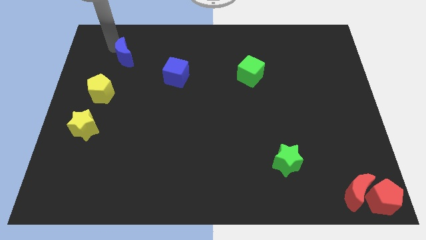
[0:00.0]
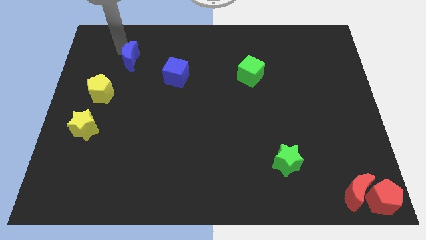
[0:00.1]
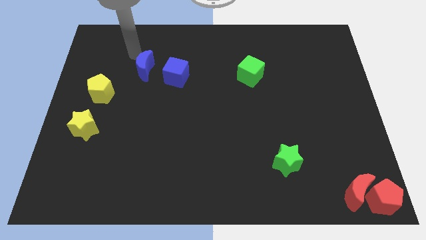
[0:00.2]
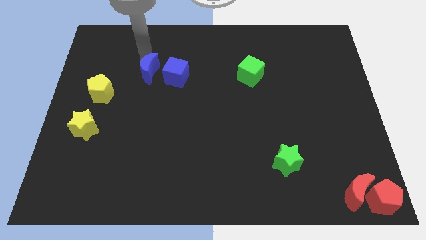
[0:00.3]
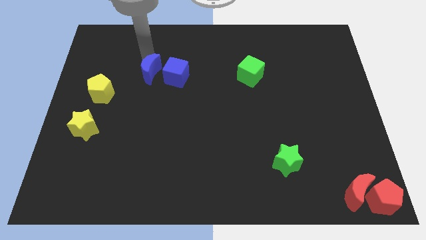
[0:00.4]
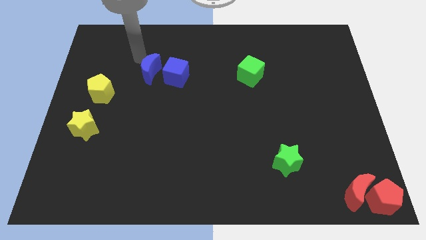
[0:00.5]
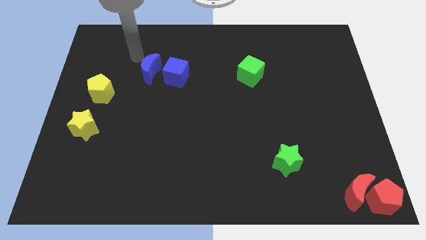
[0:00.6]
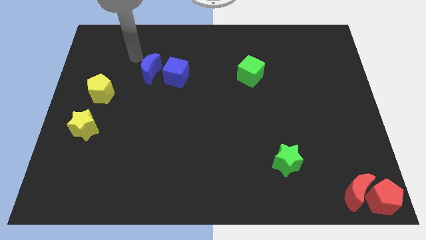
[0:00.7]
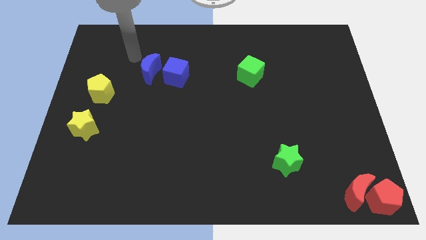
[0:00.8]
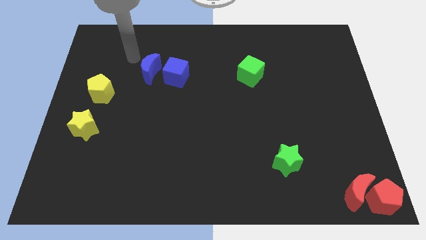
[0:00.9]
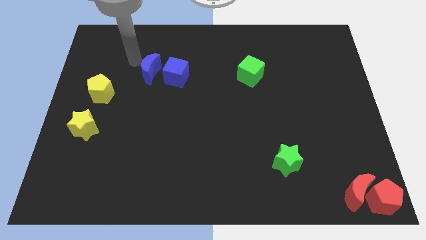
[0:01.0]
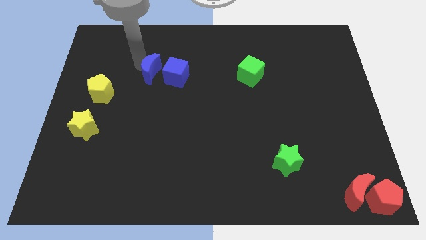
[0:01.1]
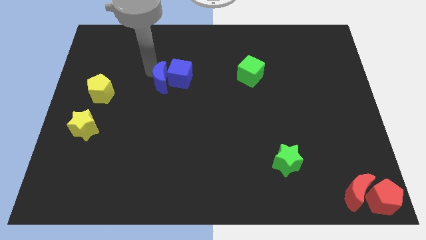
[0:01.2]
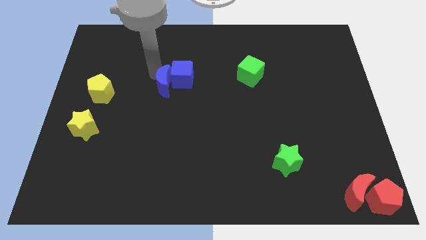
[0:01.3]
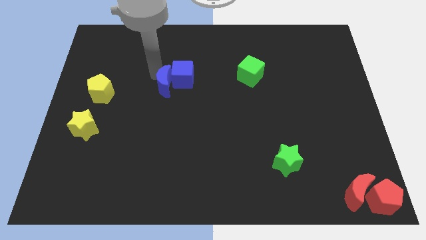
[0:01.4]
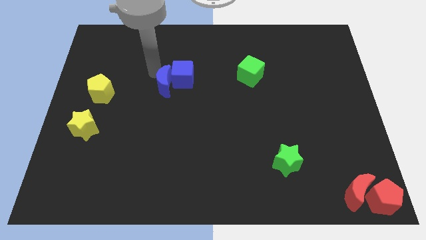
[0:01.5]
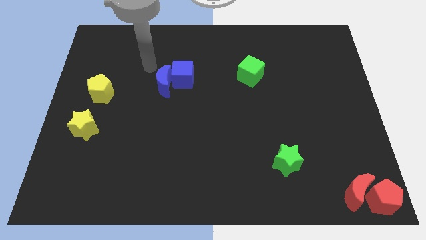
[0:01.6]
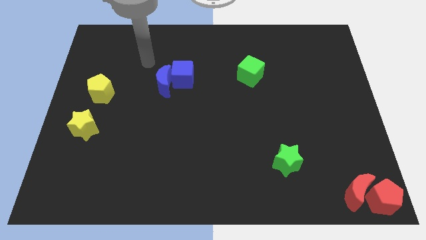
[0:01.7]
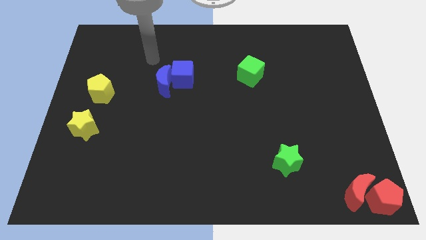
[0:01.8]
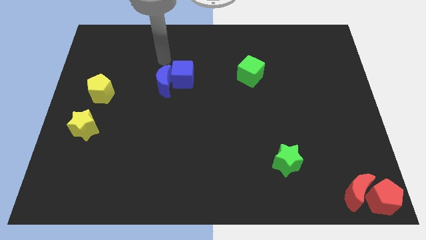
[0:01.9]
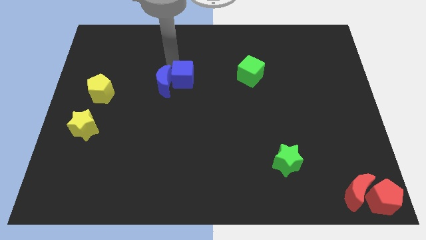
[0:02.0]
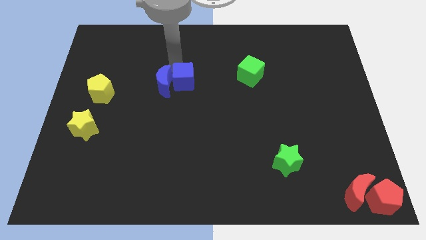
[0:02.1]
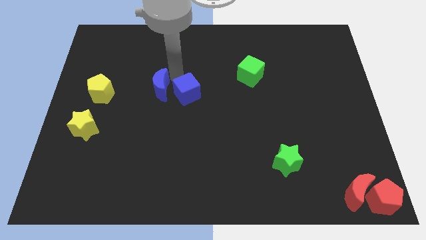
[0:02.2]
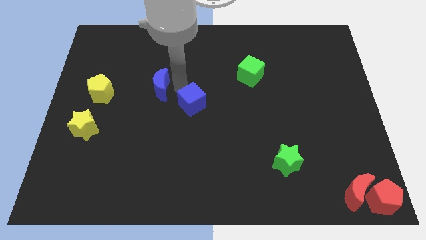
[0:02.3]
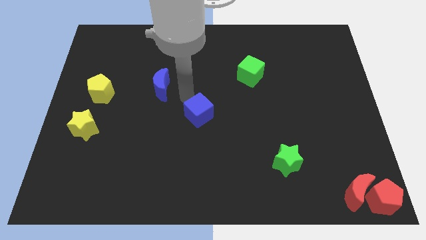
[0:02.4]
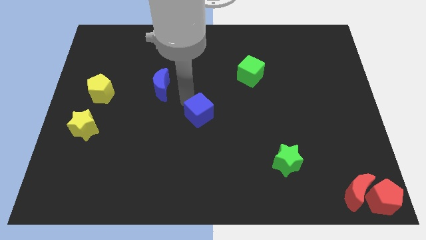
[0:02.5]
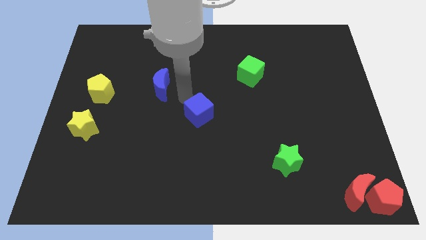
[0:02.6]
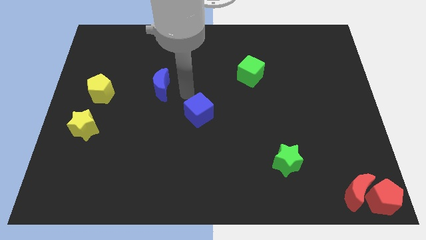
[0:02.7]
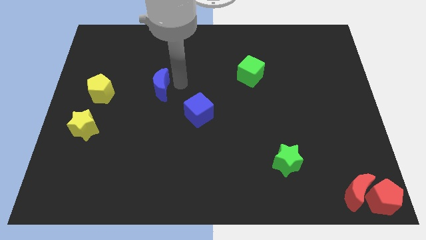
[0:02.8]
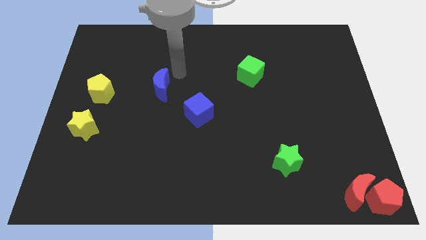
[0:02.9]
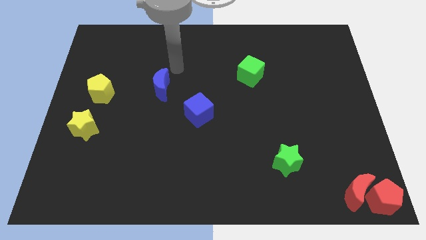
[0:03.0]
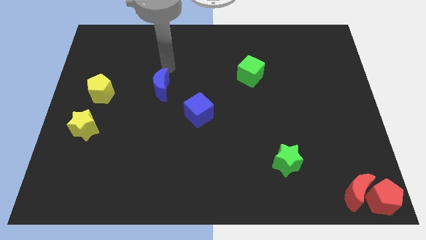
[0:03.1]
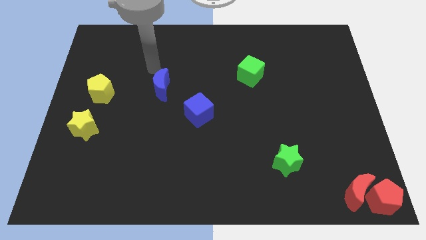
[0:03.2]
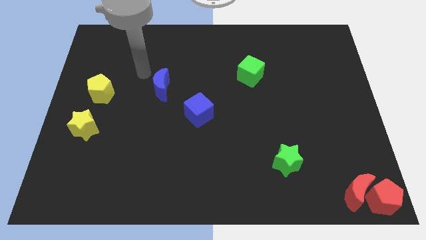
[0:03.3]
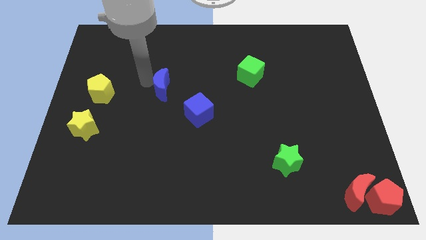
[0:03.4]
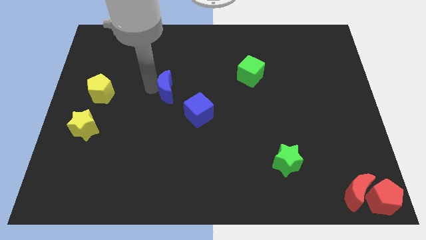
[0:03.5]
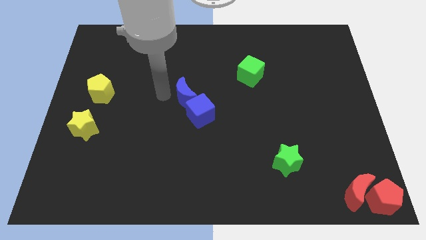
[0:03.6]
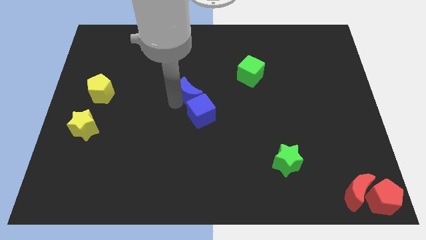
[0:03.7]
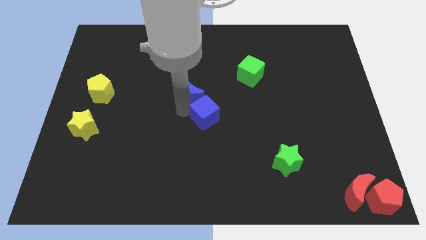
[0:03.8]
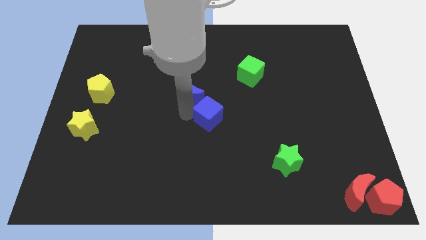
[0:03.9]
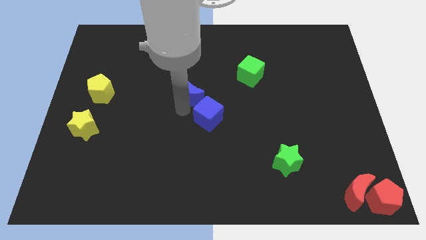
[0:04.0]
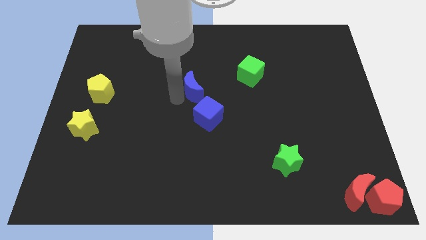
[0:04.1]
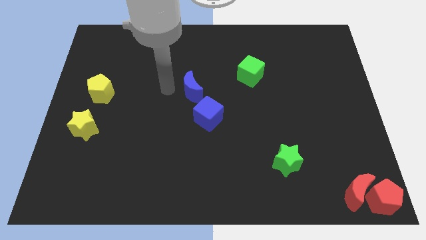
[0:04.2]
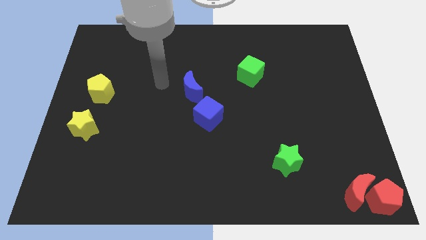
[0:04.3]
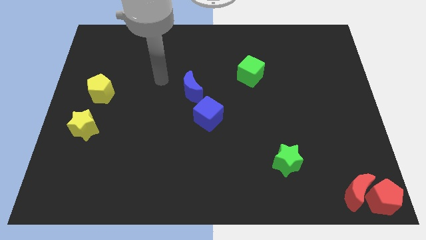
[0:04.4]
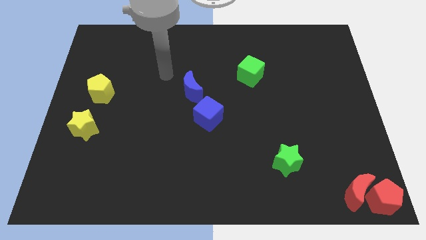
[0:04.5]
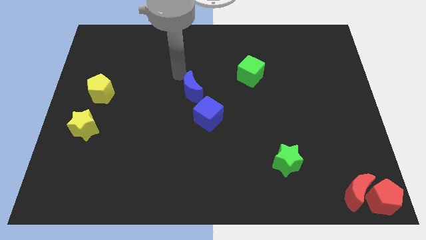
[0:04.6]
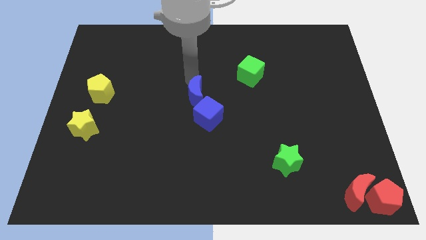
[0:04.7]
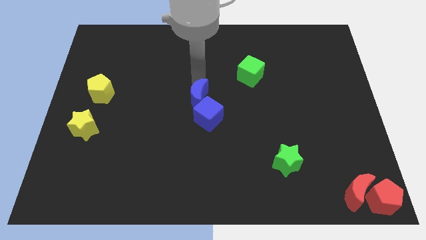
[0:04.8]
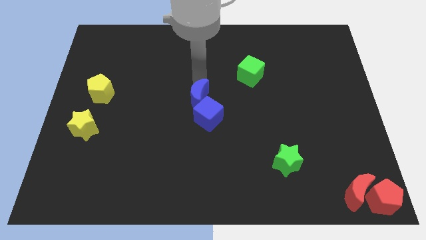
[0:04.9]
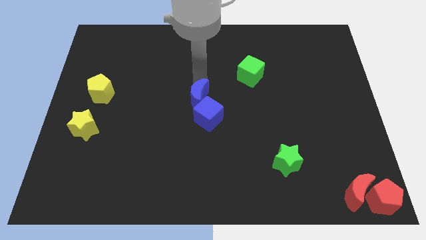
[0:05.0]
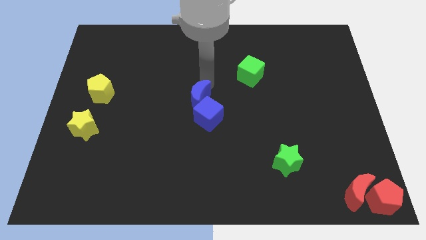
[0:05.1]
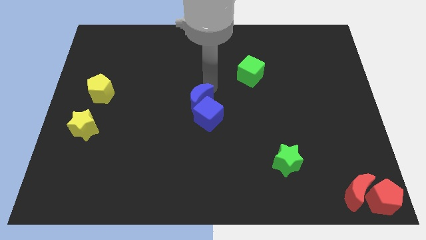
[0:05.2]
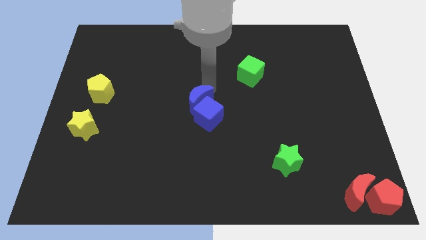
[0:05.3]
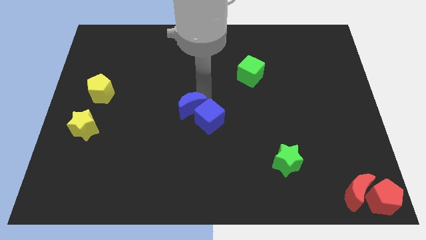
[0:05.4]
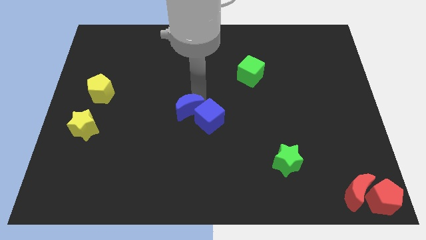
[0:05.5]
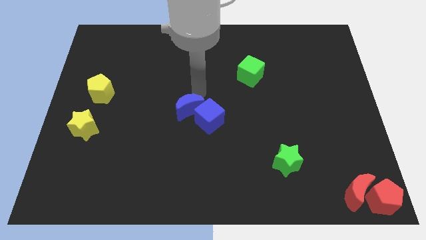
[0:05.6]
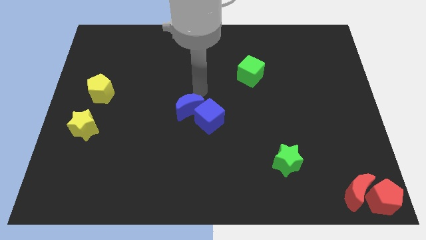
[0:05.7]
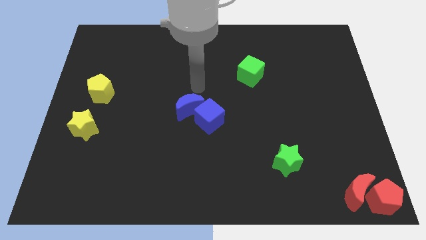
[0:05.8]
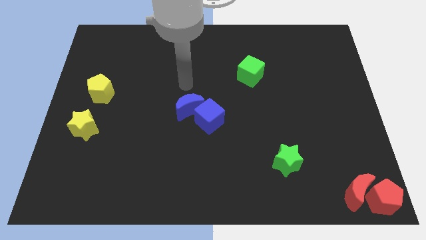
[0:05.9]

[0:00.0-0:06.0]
place the blue crescent and blue cube at the center of the board

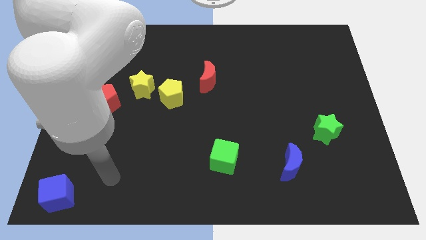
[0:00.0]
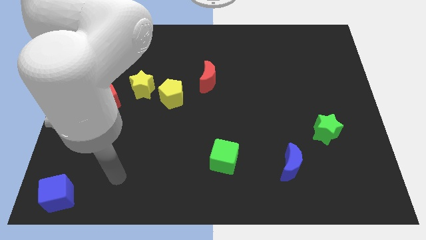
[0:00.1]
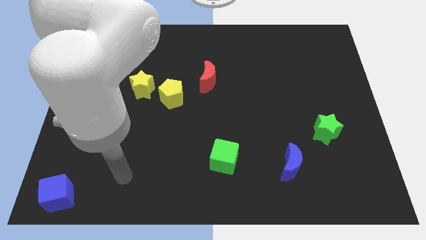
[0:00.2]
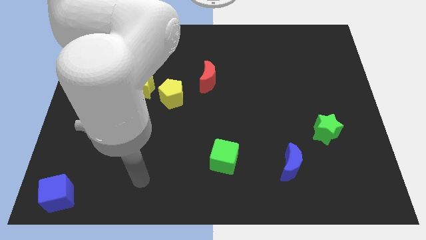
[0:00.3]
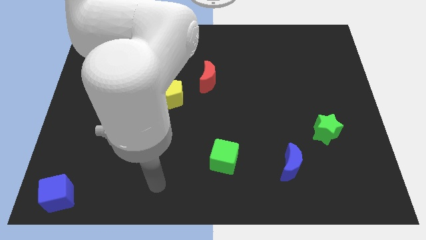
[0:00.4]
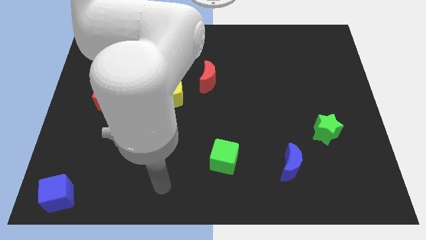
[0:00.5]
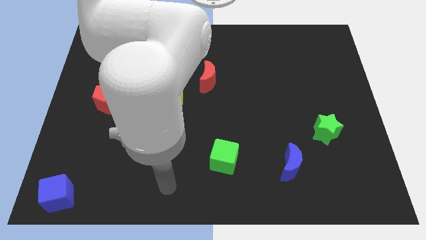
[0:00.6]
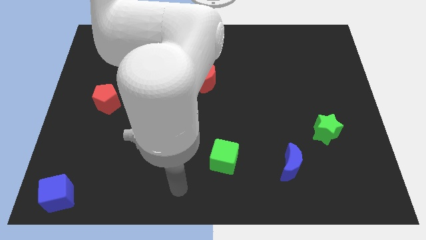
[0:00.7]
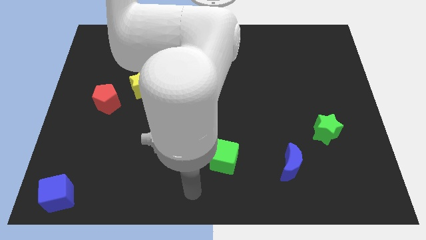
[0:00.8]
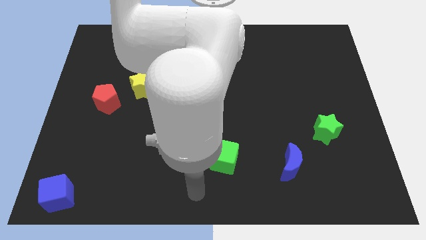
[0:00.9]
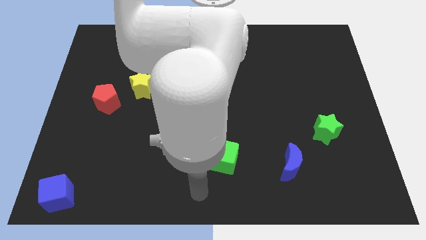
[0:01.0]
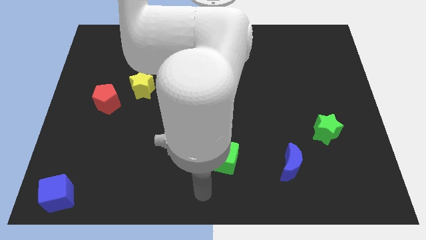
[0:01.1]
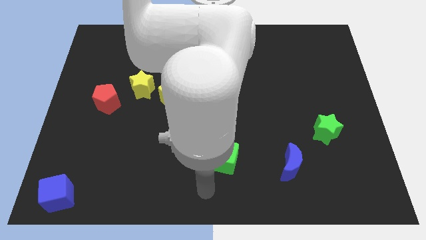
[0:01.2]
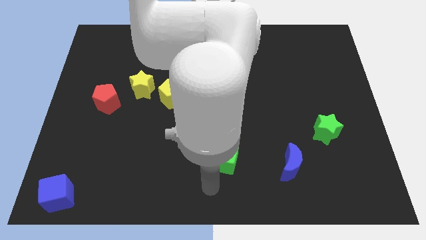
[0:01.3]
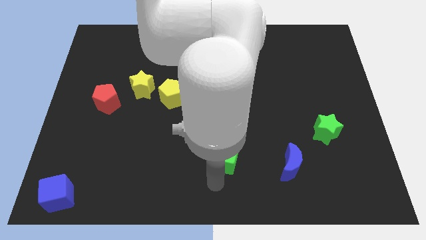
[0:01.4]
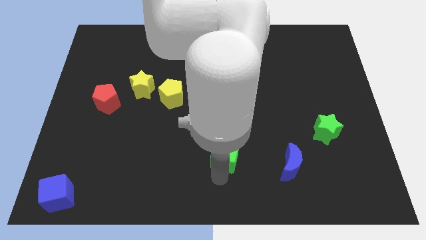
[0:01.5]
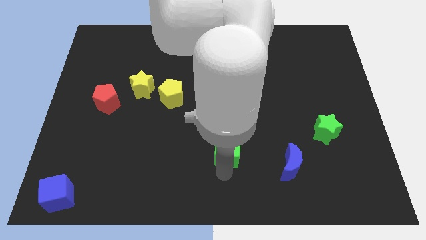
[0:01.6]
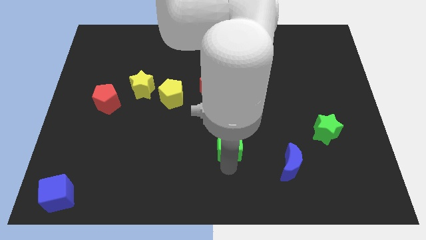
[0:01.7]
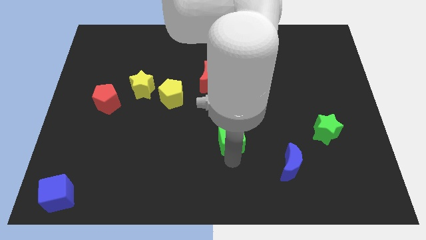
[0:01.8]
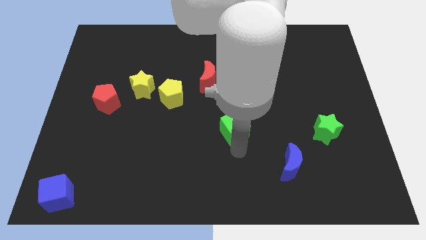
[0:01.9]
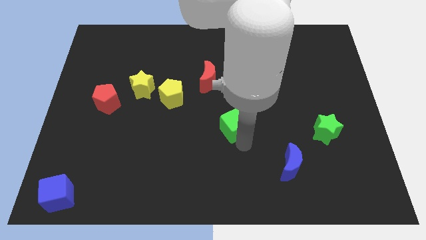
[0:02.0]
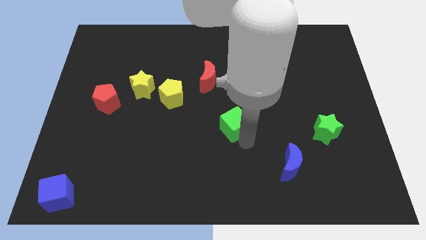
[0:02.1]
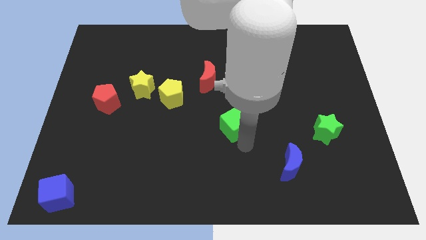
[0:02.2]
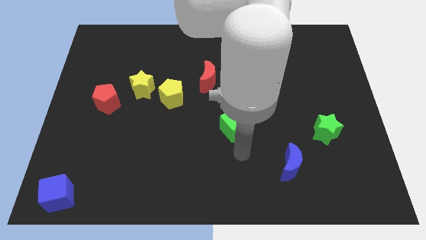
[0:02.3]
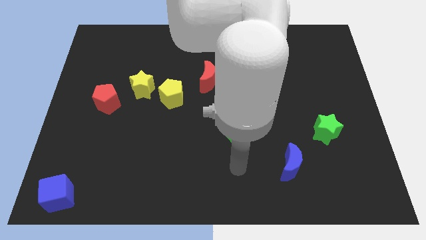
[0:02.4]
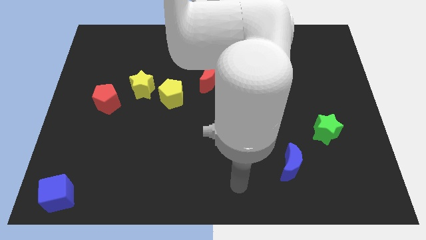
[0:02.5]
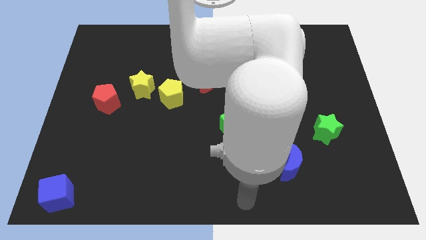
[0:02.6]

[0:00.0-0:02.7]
move the arm towards right side bottom of the board

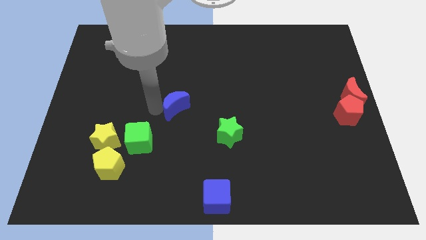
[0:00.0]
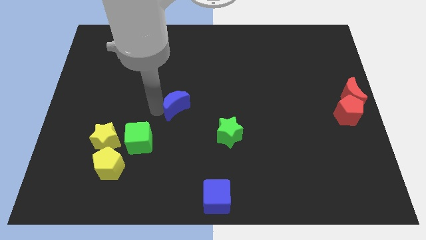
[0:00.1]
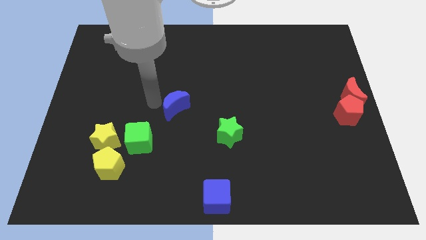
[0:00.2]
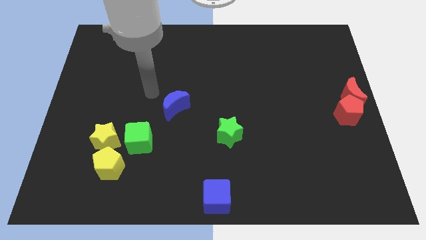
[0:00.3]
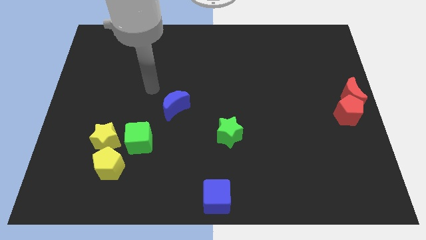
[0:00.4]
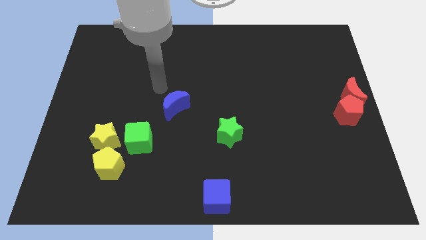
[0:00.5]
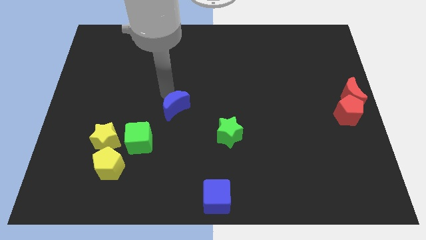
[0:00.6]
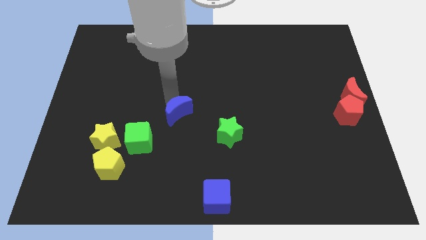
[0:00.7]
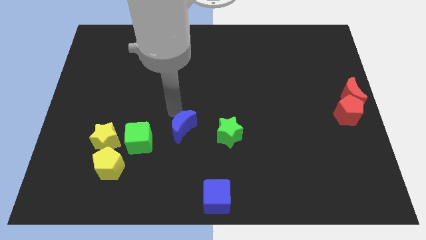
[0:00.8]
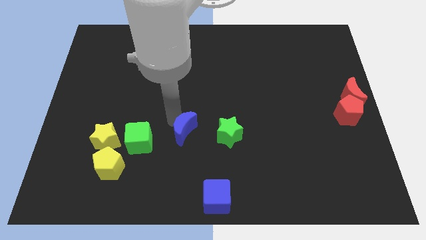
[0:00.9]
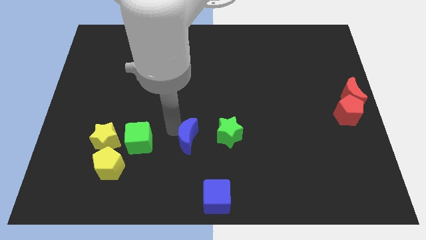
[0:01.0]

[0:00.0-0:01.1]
place the blue moon in between the green cube and green star
